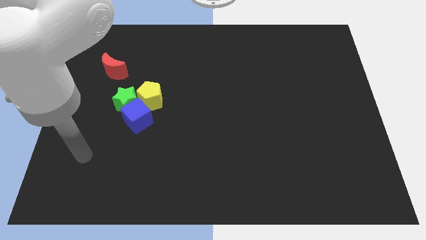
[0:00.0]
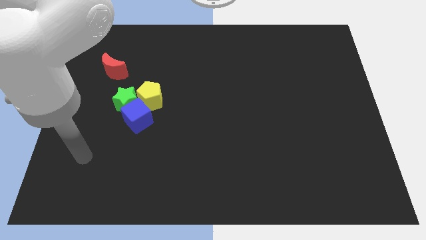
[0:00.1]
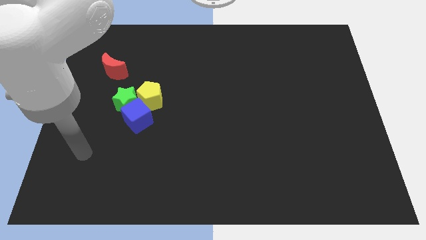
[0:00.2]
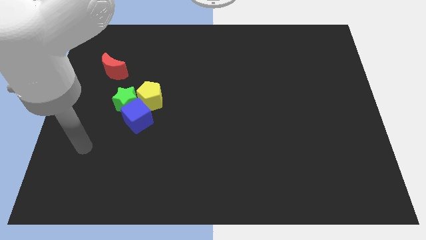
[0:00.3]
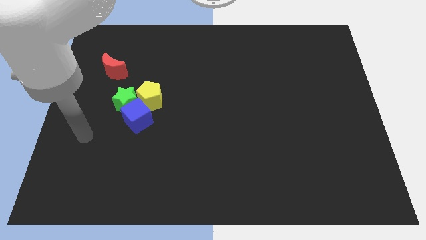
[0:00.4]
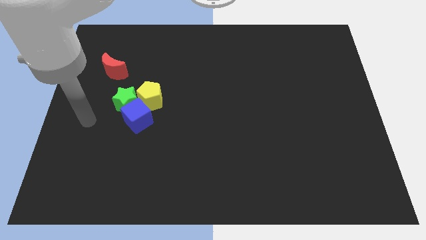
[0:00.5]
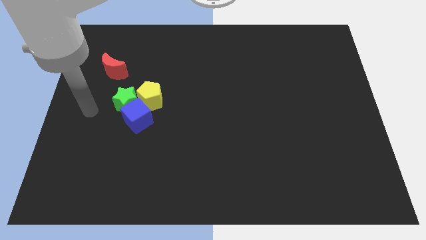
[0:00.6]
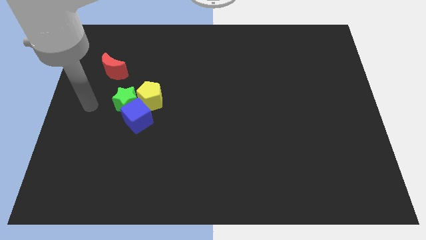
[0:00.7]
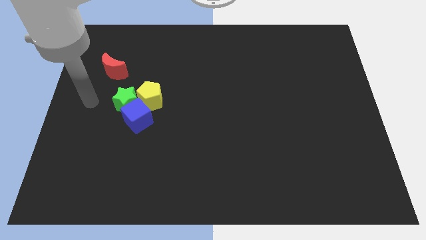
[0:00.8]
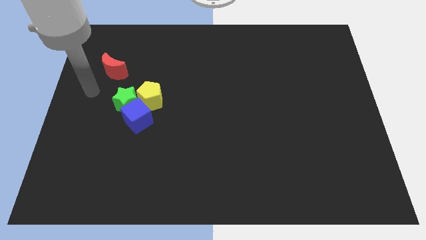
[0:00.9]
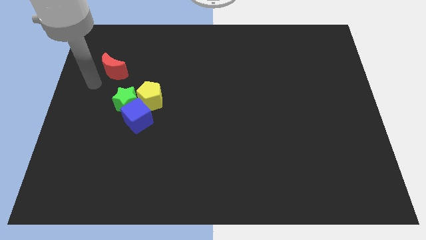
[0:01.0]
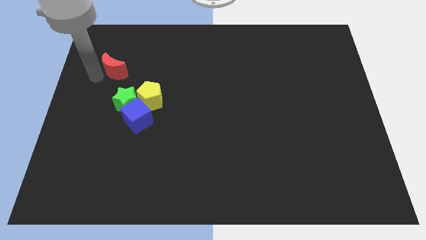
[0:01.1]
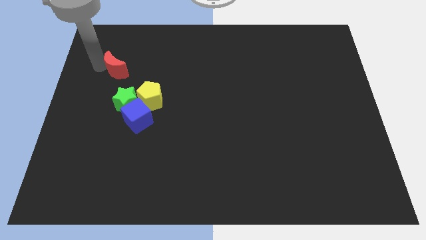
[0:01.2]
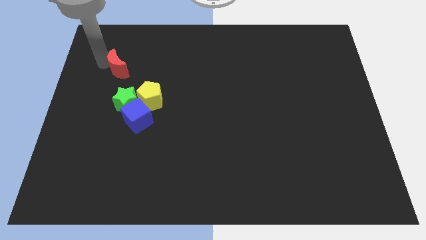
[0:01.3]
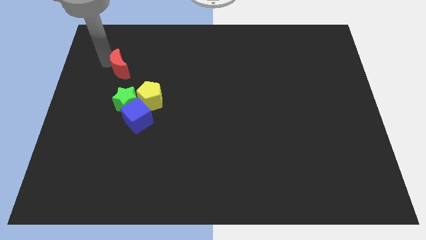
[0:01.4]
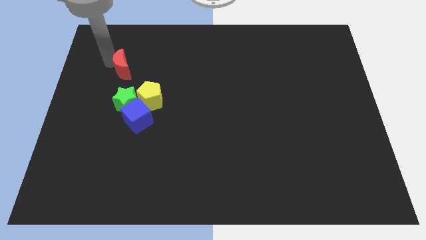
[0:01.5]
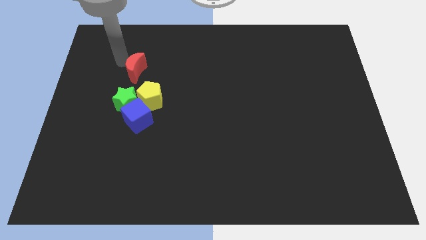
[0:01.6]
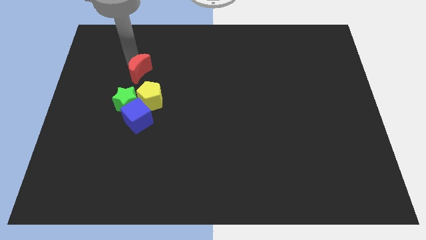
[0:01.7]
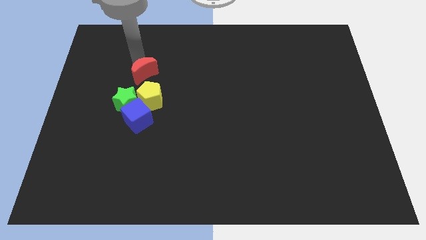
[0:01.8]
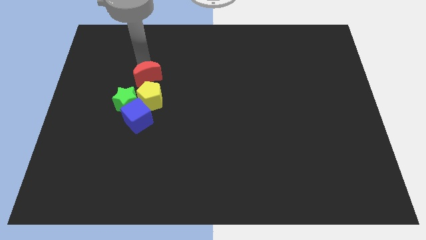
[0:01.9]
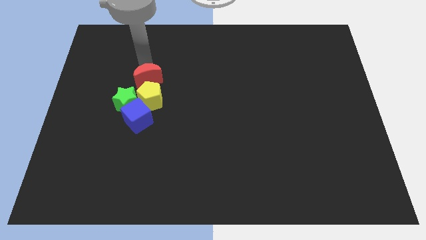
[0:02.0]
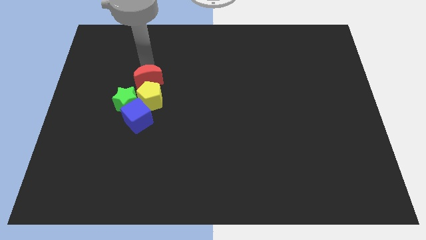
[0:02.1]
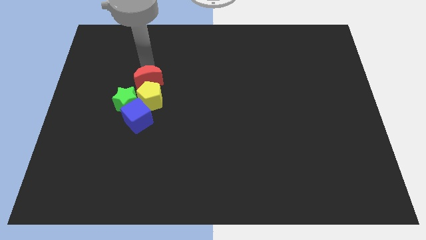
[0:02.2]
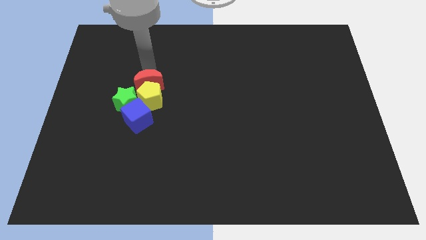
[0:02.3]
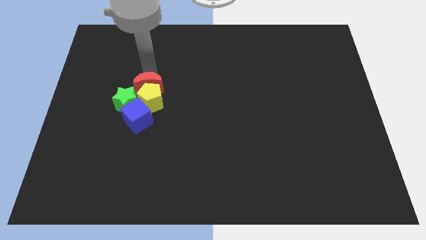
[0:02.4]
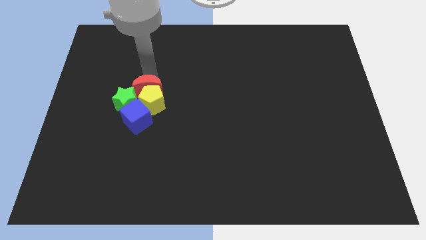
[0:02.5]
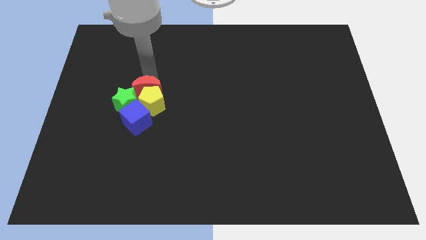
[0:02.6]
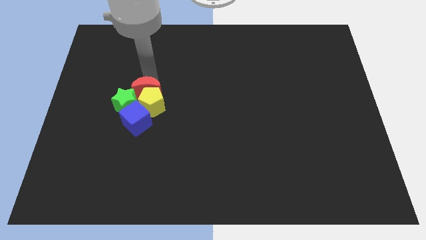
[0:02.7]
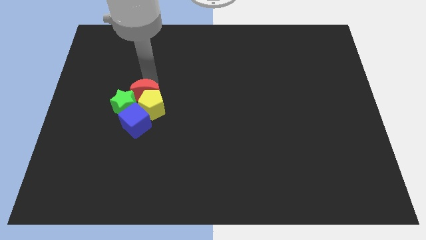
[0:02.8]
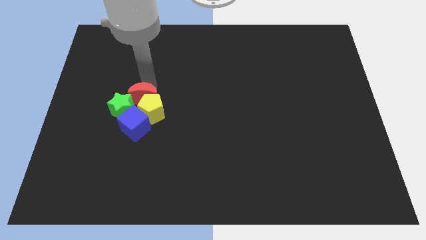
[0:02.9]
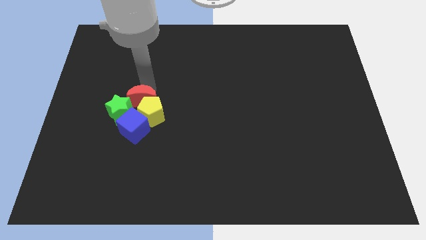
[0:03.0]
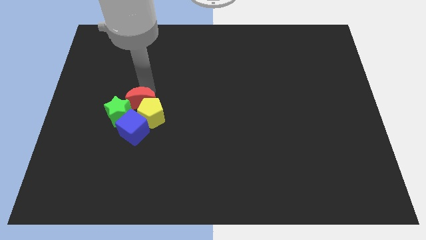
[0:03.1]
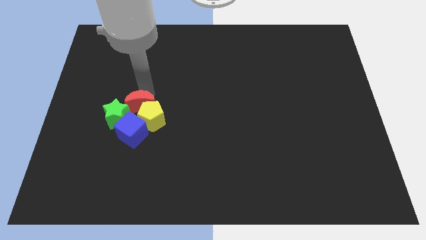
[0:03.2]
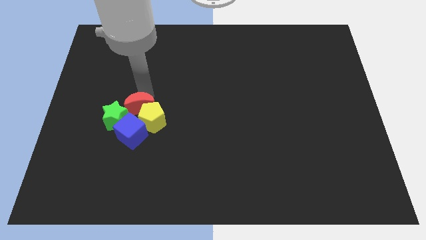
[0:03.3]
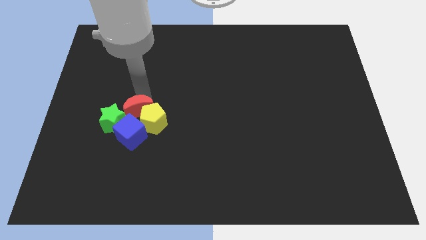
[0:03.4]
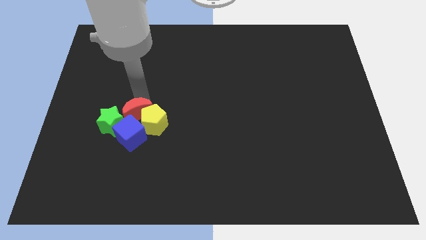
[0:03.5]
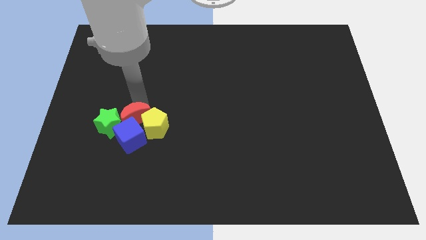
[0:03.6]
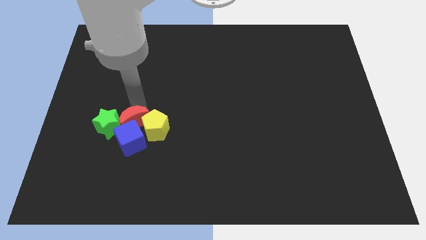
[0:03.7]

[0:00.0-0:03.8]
move the moon towards the cube

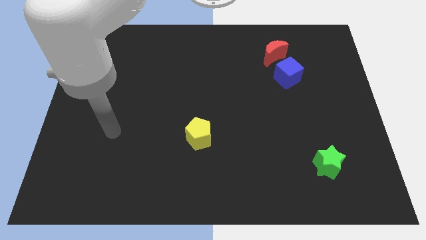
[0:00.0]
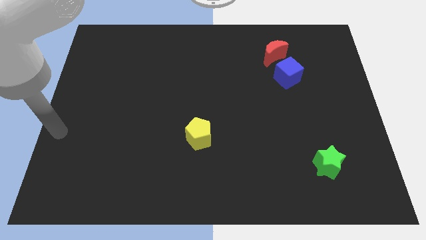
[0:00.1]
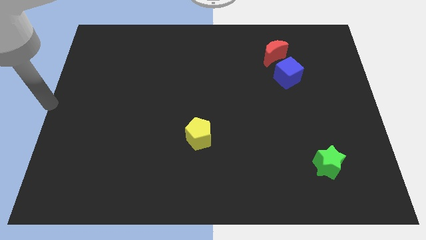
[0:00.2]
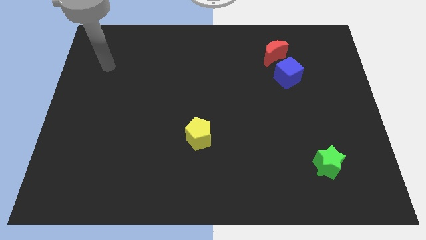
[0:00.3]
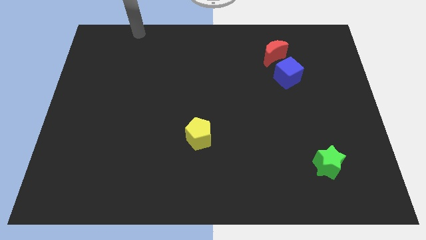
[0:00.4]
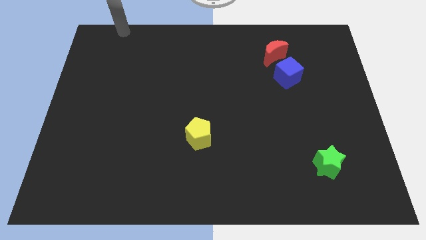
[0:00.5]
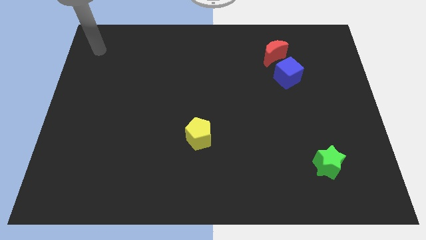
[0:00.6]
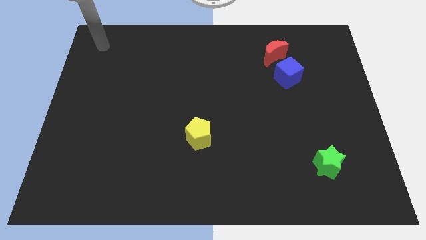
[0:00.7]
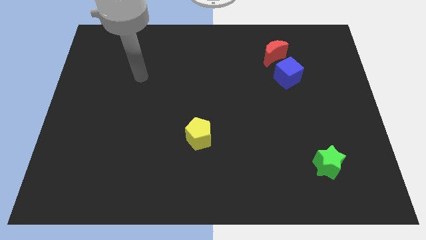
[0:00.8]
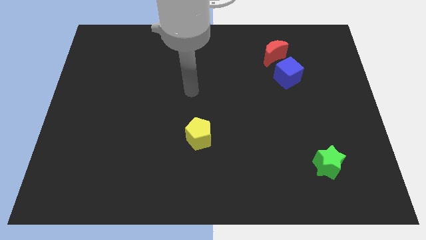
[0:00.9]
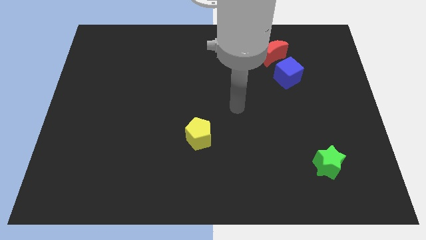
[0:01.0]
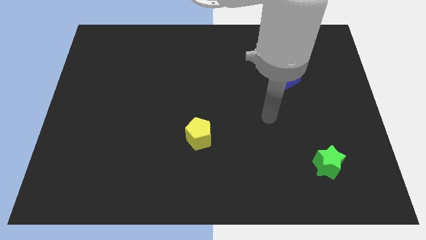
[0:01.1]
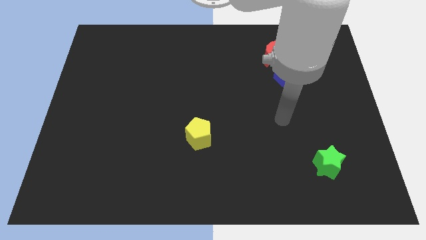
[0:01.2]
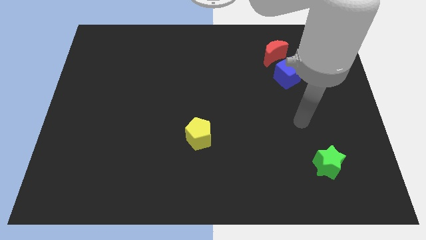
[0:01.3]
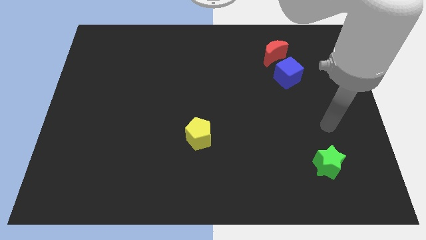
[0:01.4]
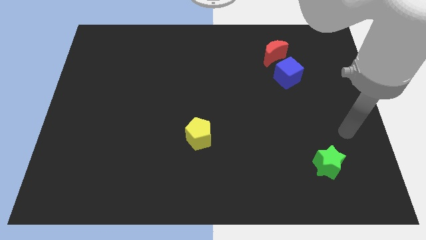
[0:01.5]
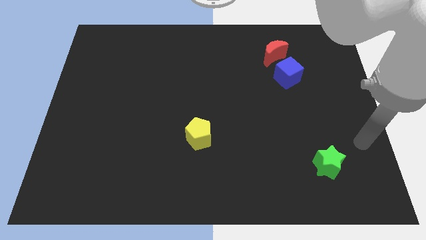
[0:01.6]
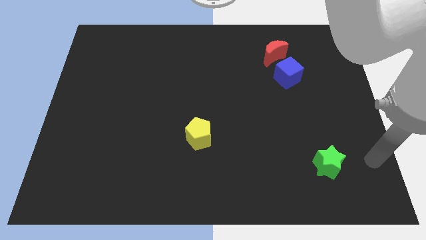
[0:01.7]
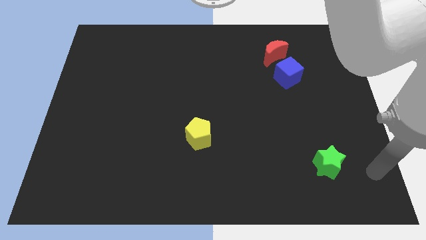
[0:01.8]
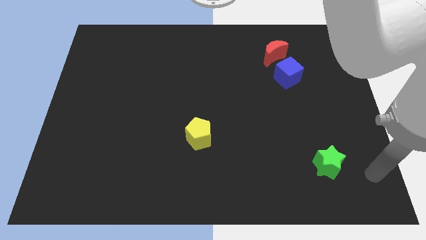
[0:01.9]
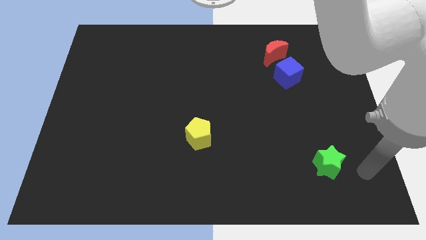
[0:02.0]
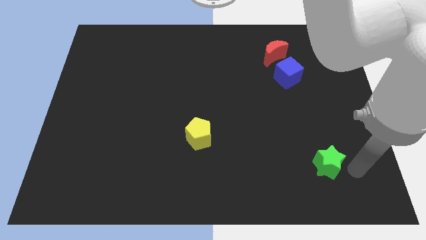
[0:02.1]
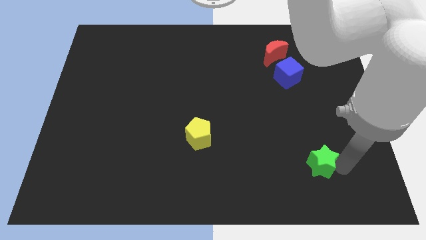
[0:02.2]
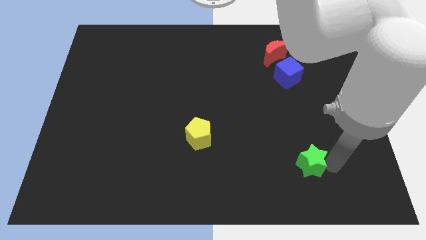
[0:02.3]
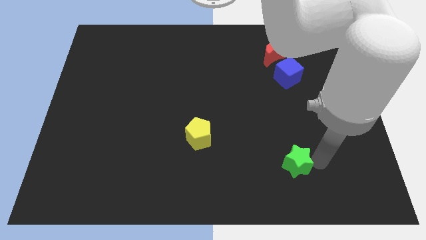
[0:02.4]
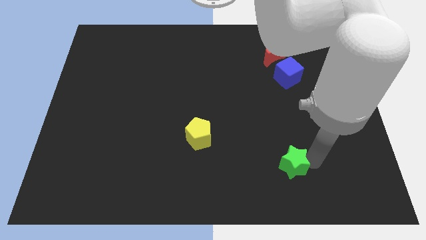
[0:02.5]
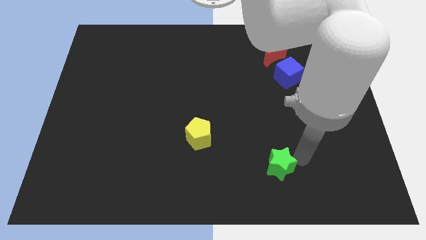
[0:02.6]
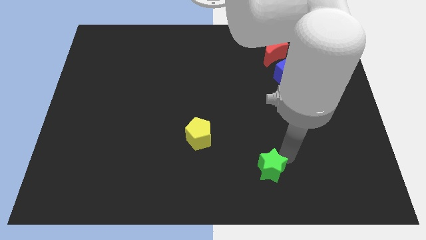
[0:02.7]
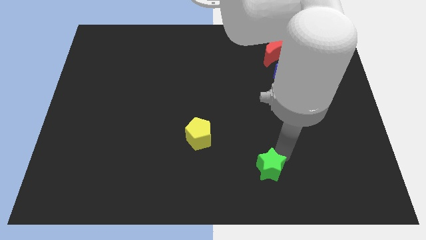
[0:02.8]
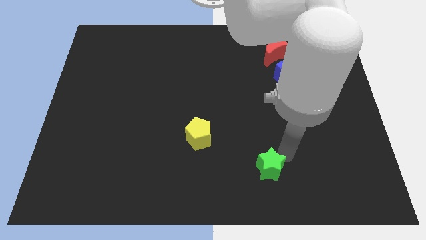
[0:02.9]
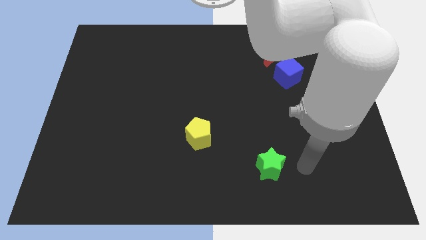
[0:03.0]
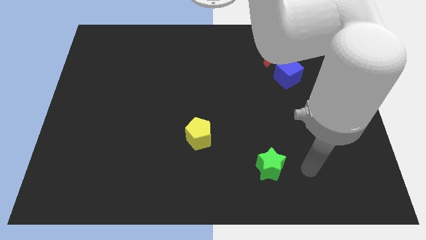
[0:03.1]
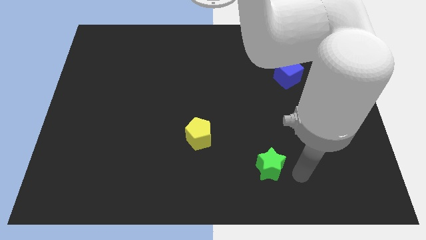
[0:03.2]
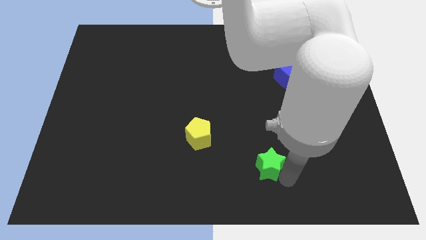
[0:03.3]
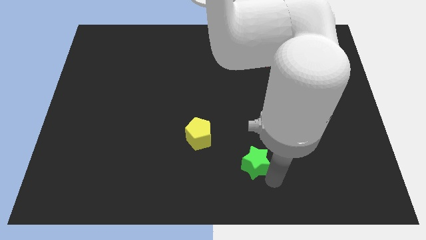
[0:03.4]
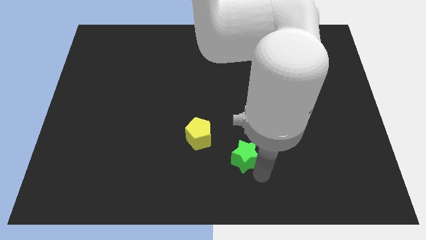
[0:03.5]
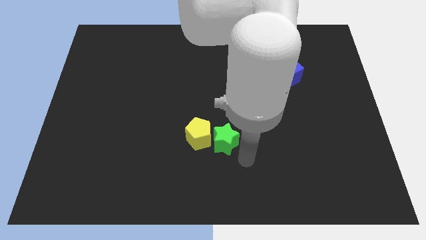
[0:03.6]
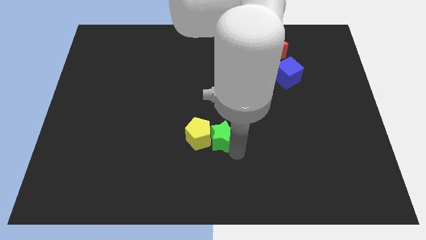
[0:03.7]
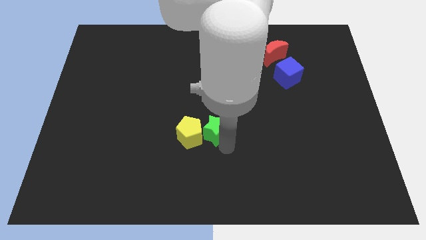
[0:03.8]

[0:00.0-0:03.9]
move the star next to the pentagon

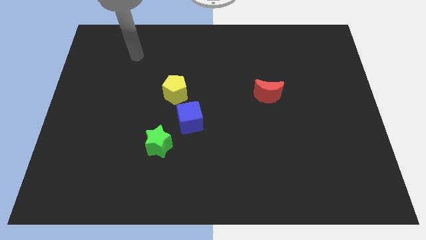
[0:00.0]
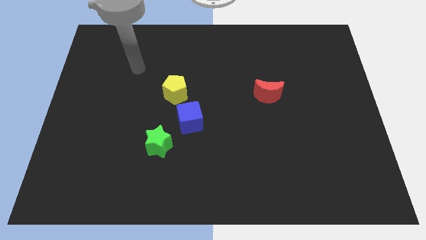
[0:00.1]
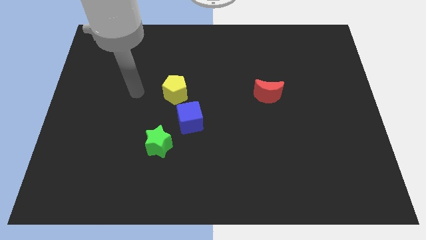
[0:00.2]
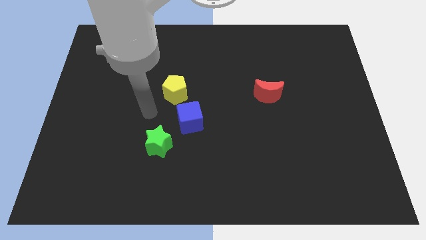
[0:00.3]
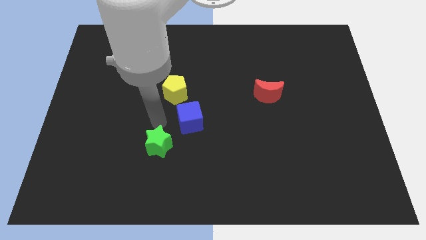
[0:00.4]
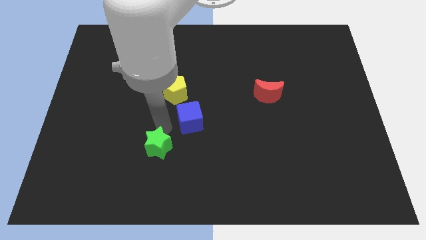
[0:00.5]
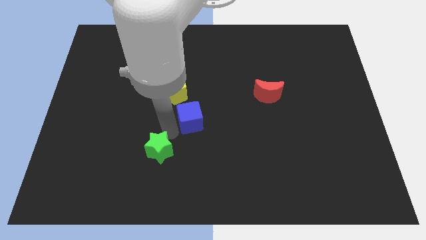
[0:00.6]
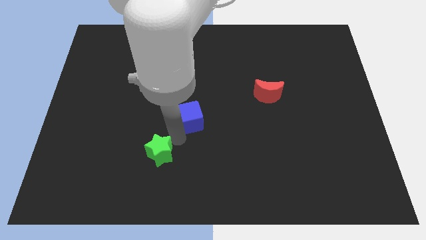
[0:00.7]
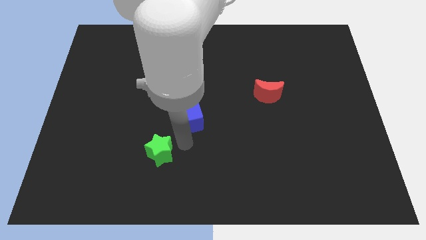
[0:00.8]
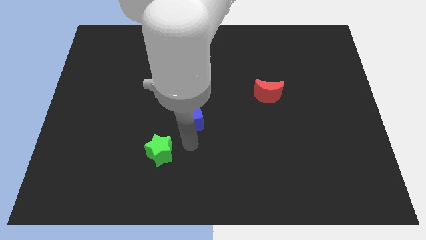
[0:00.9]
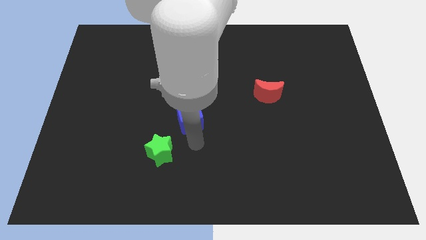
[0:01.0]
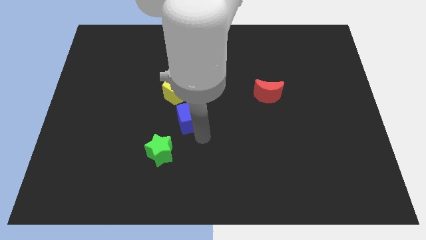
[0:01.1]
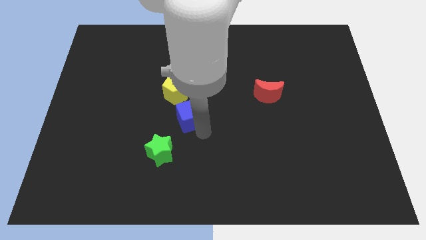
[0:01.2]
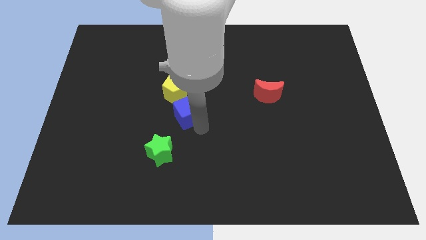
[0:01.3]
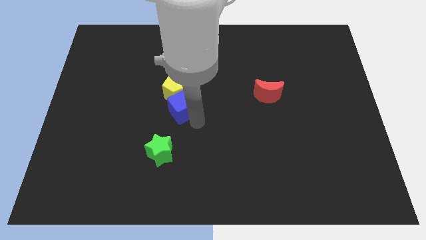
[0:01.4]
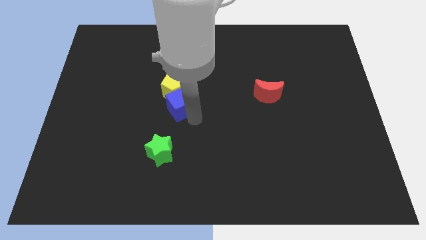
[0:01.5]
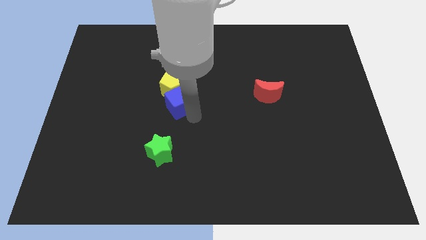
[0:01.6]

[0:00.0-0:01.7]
push the blue block to the yellow pentagon
